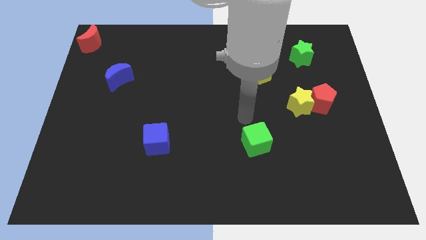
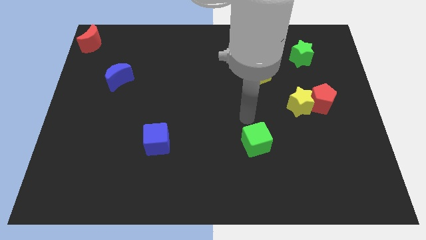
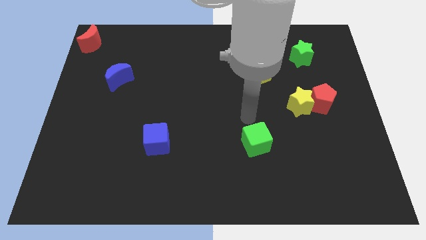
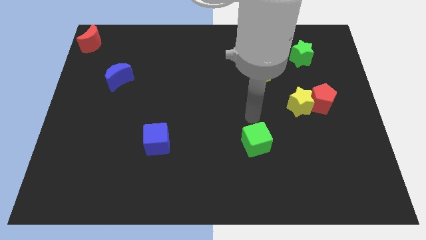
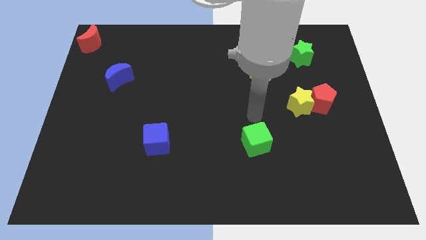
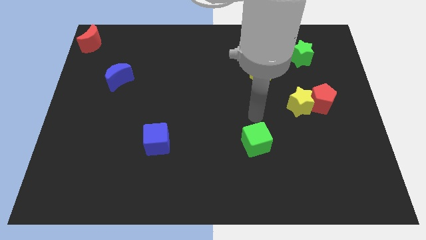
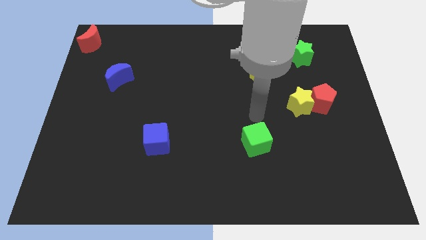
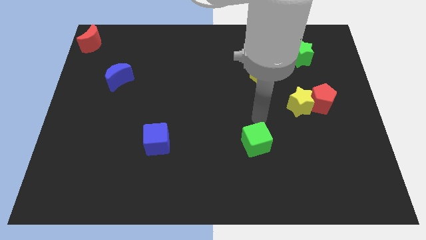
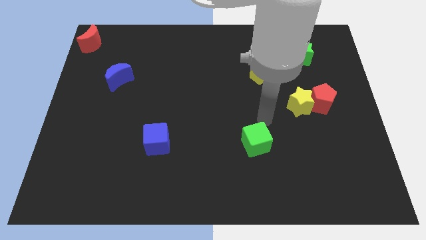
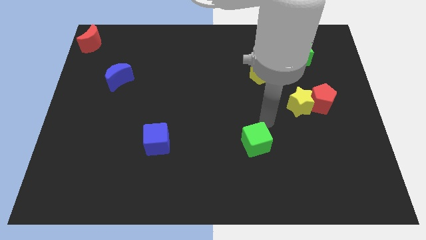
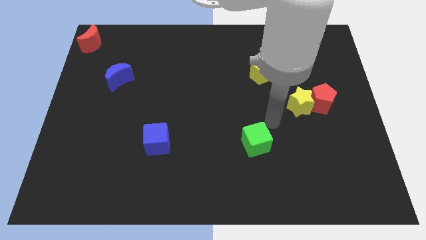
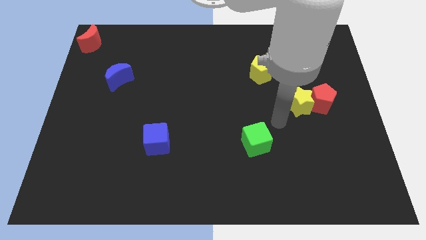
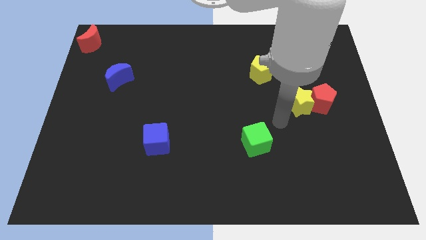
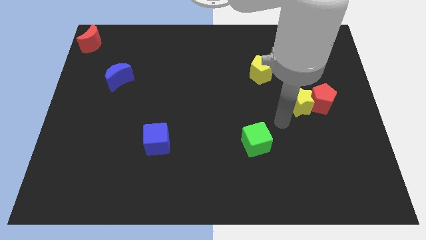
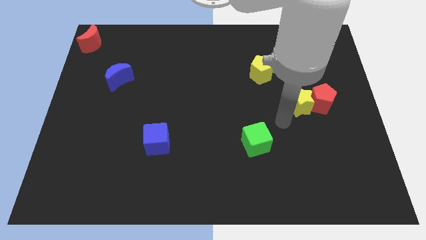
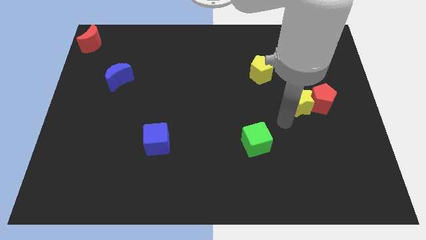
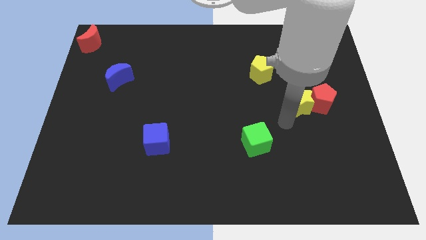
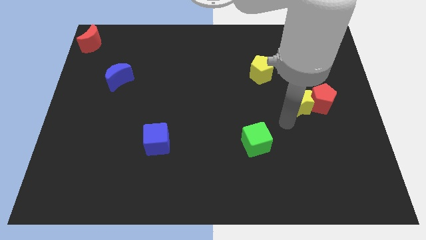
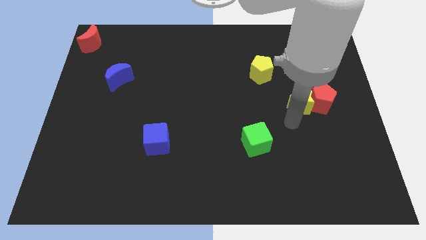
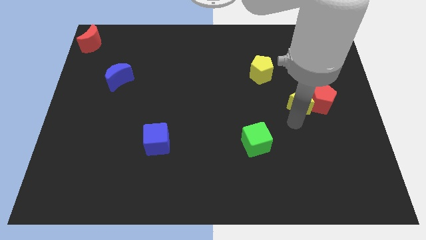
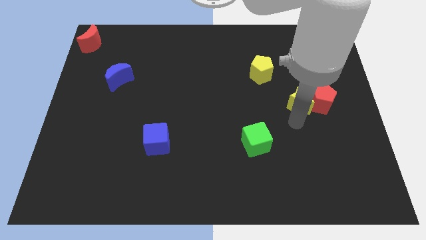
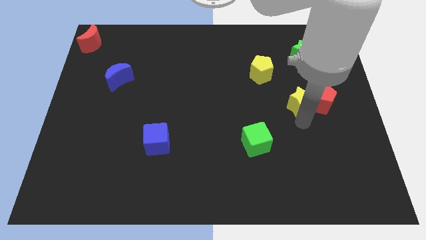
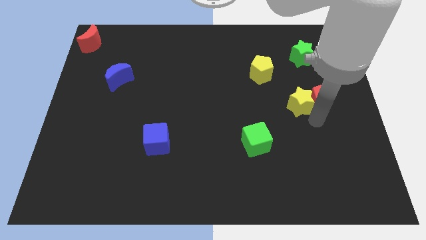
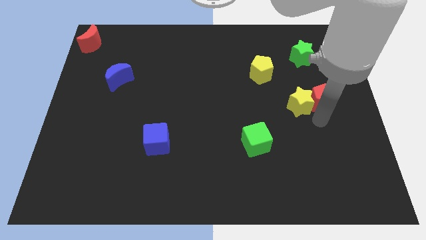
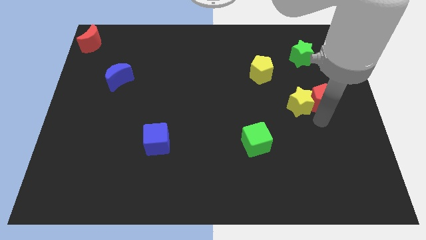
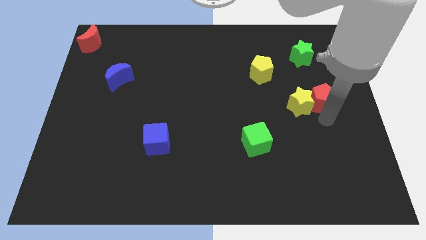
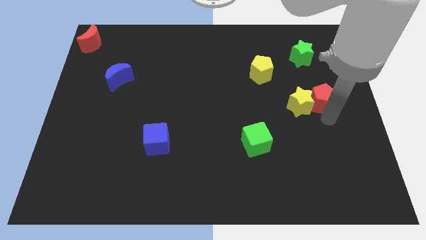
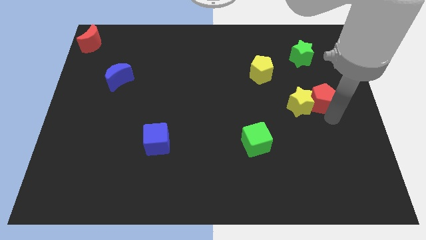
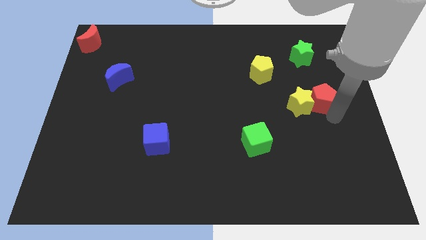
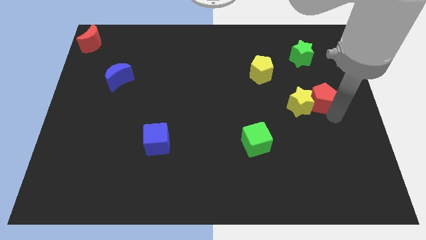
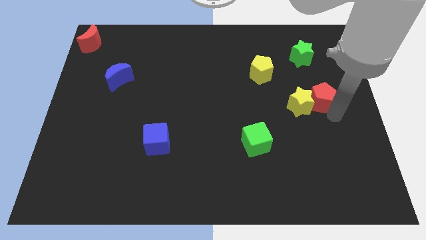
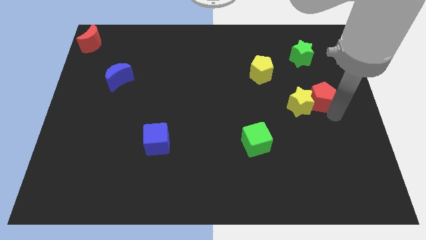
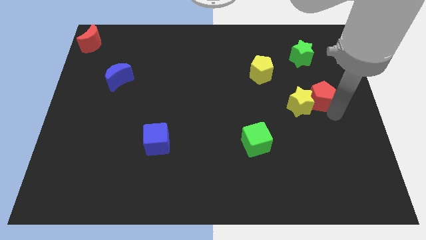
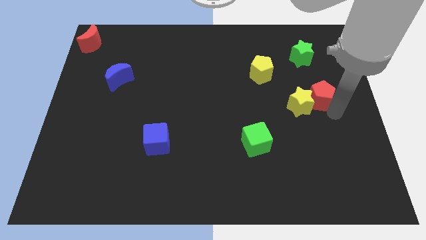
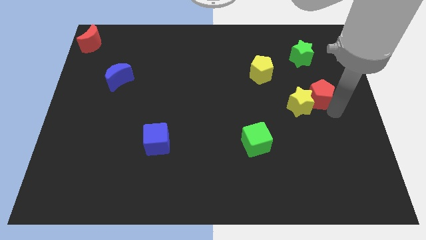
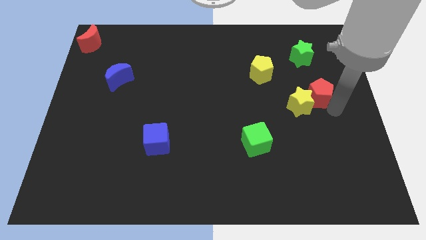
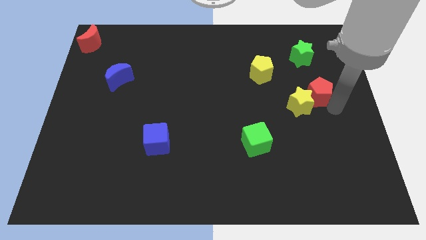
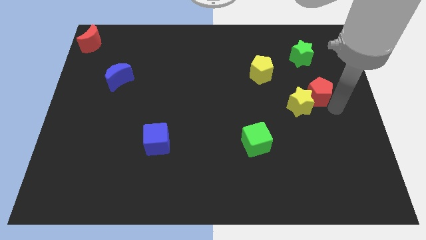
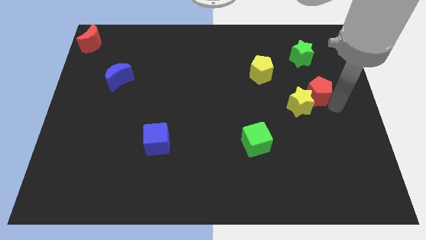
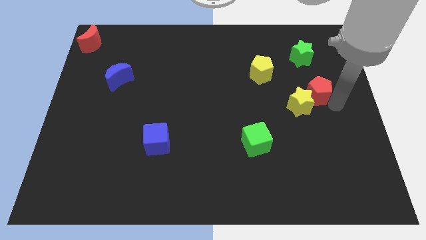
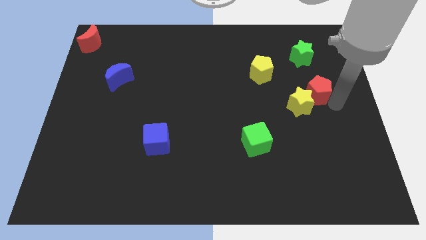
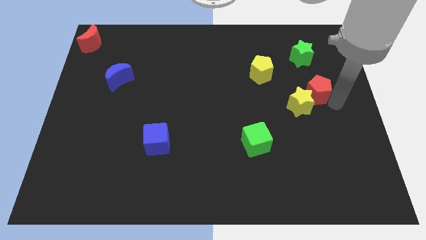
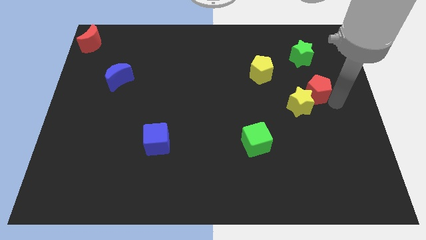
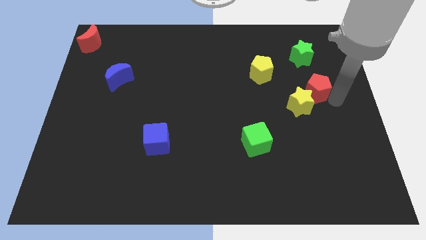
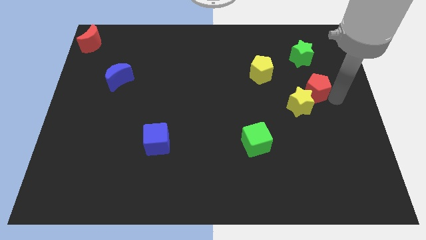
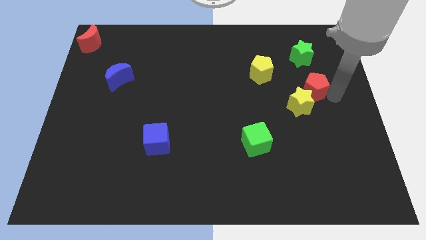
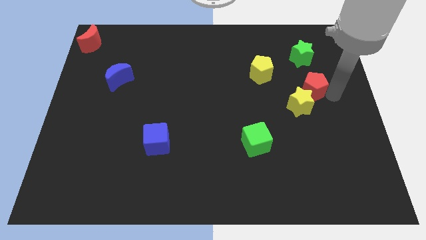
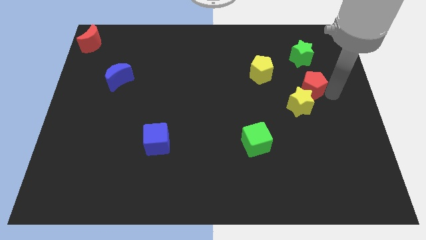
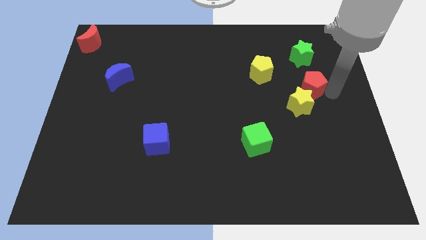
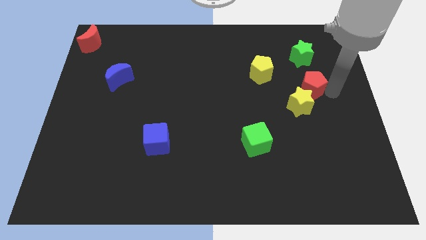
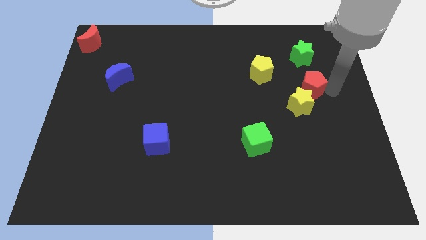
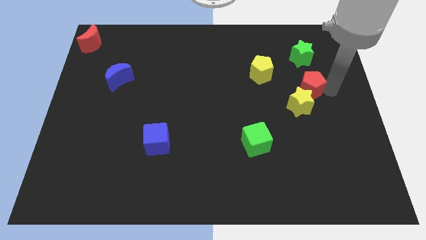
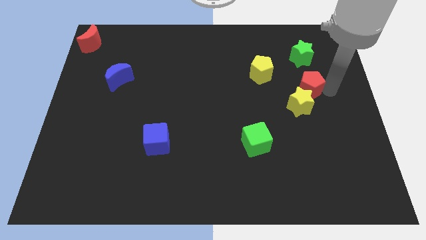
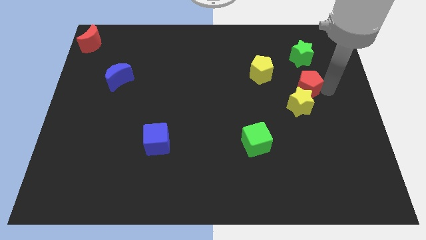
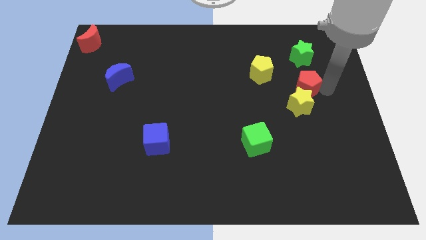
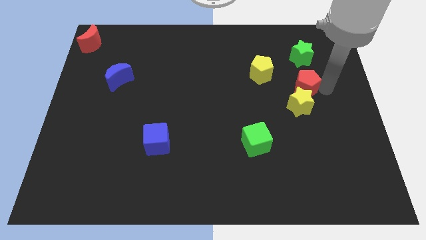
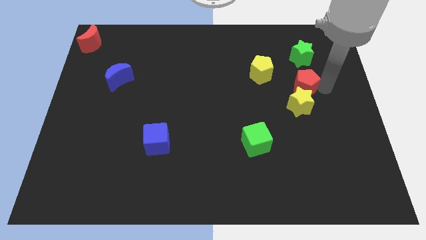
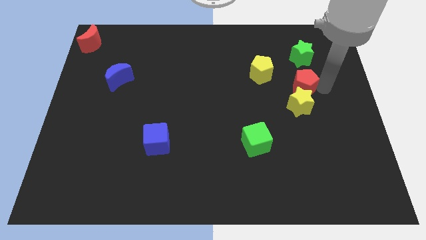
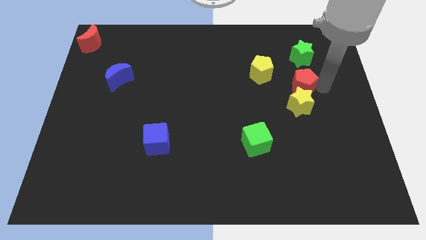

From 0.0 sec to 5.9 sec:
put the red pentagon in between the green star and the yellow star

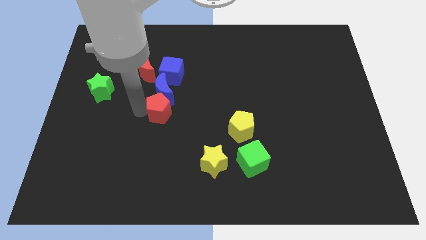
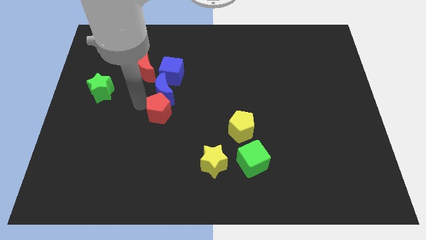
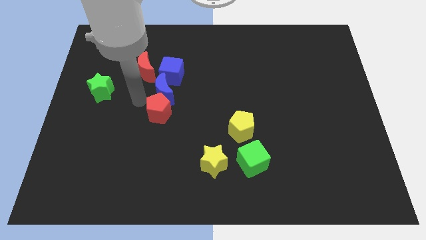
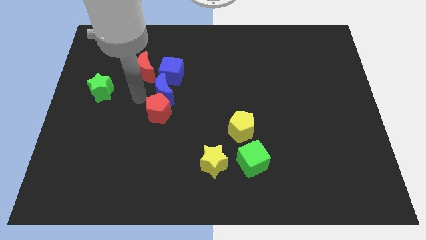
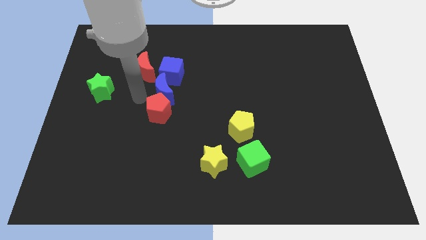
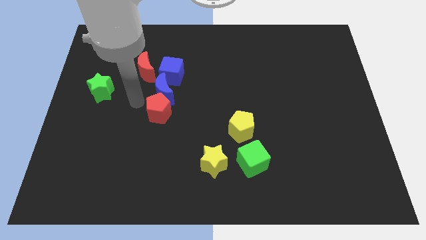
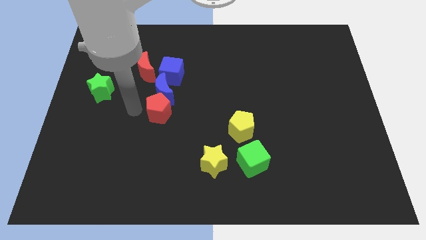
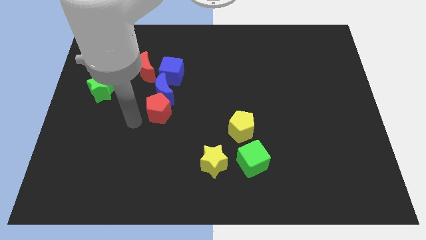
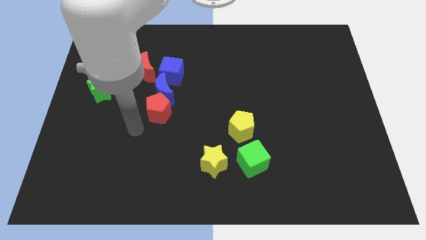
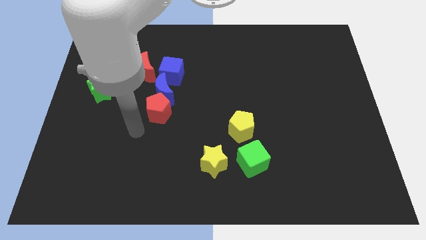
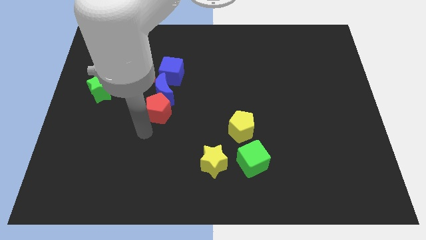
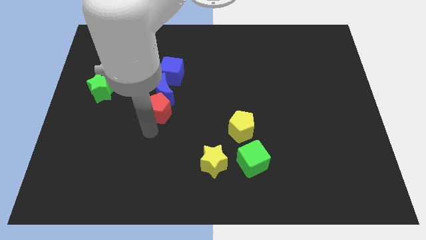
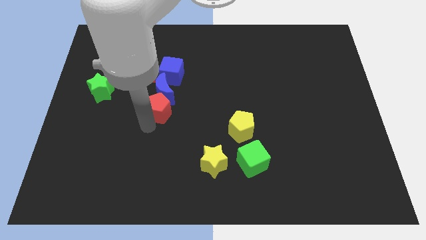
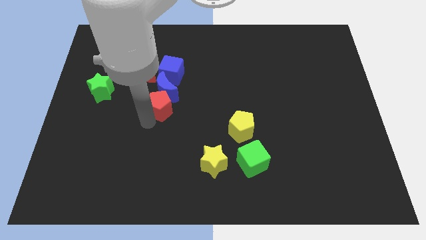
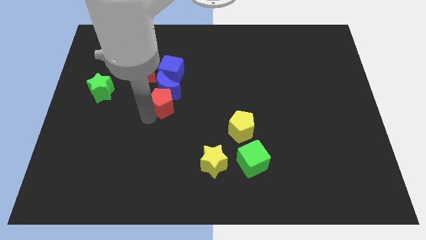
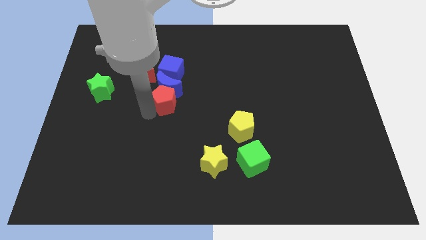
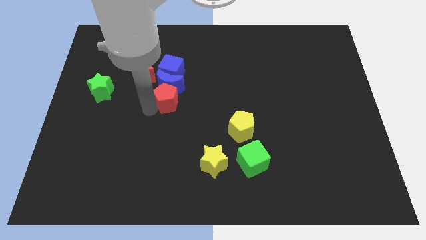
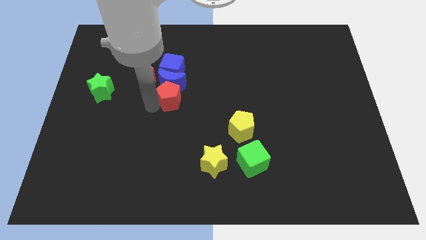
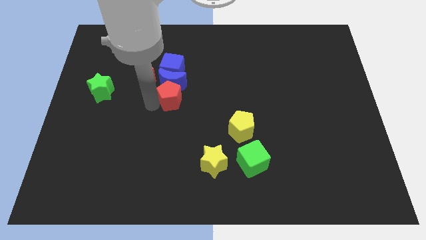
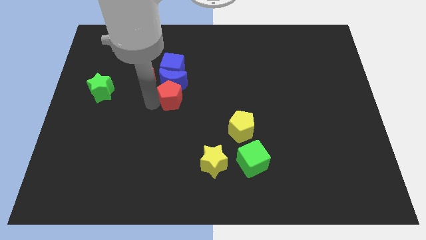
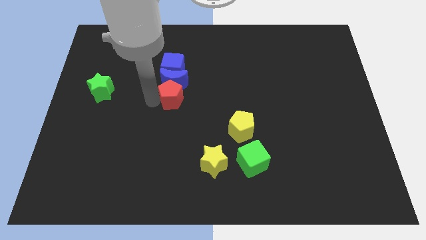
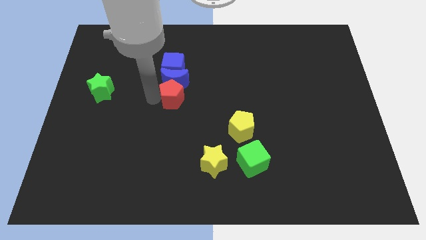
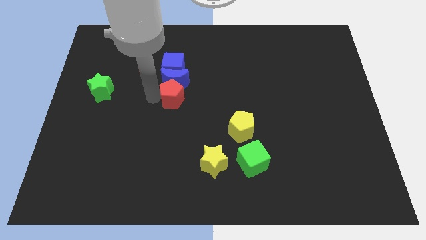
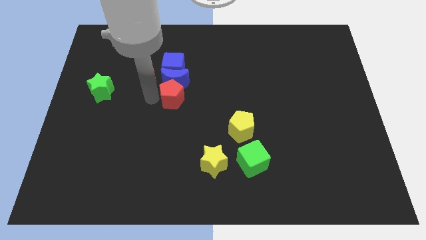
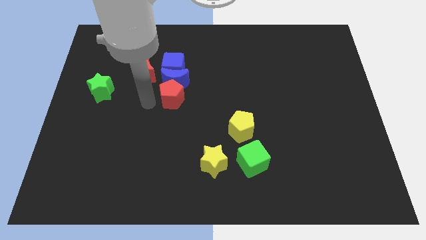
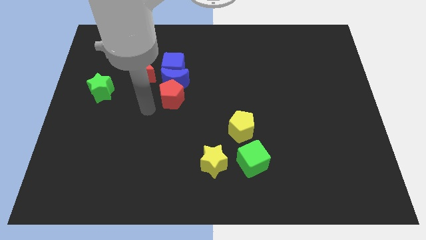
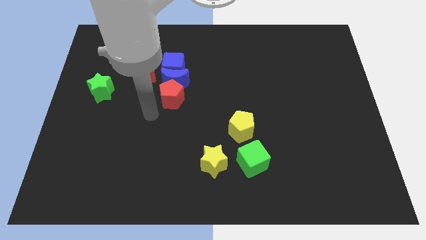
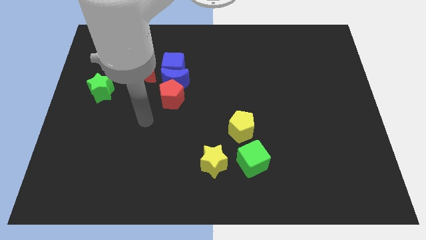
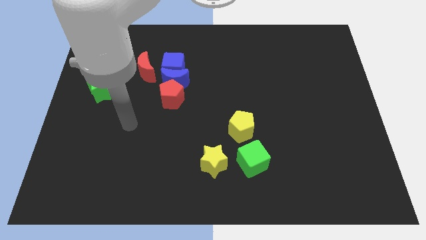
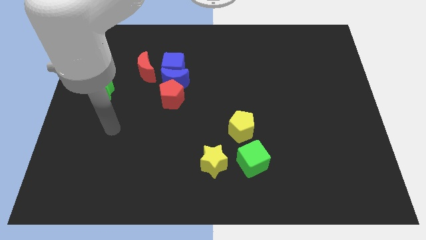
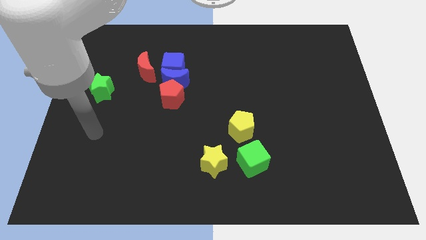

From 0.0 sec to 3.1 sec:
push red pentagon close into blue blocks
